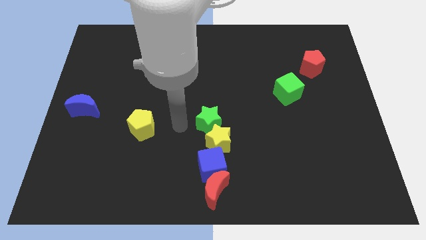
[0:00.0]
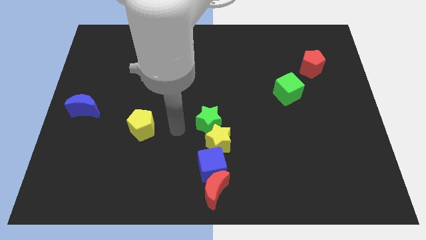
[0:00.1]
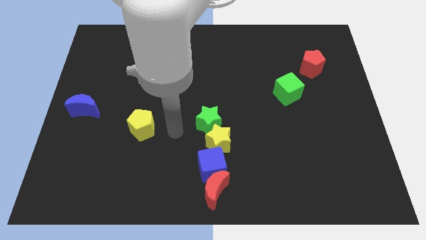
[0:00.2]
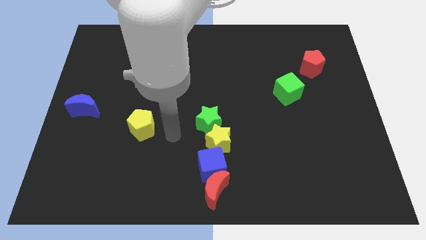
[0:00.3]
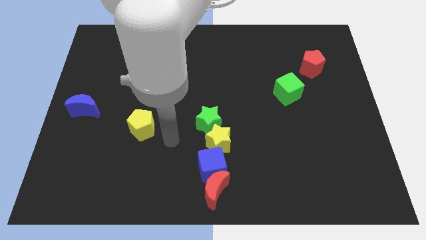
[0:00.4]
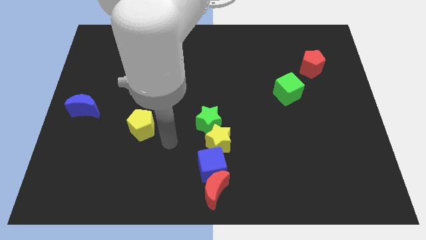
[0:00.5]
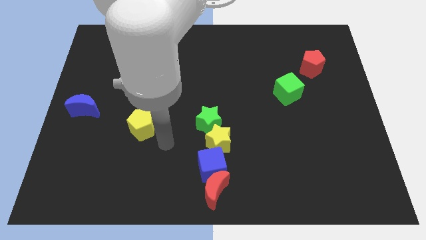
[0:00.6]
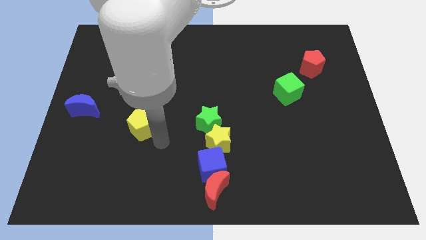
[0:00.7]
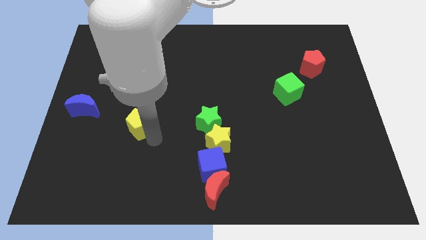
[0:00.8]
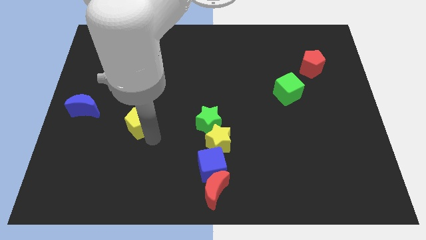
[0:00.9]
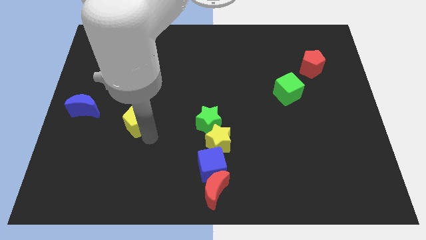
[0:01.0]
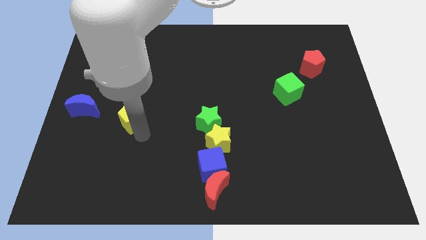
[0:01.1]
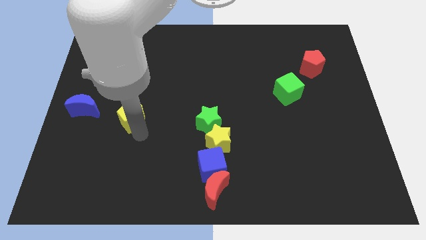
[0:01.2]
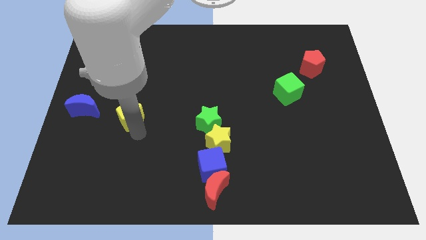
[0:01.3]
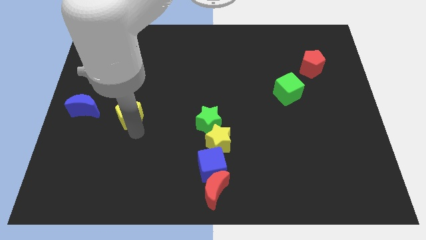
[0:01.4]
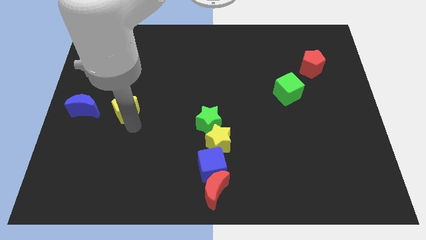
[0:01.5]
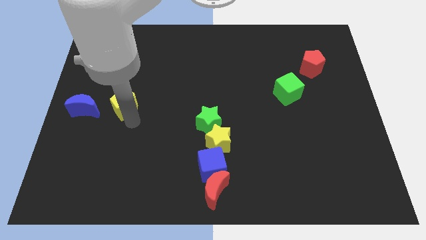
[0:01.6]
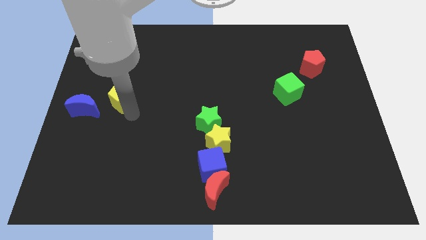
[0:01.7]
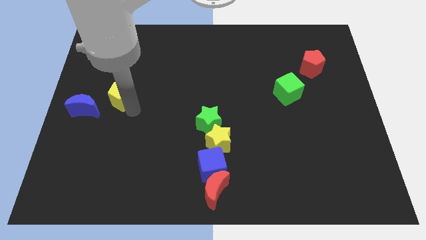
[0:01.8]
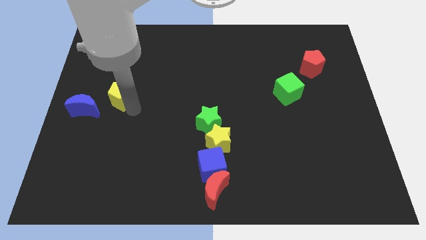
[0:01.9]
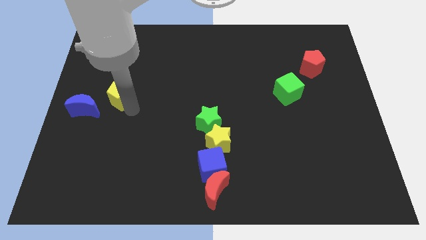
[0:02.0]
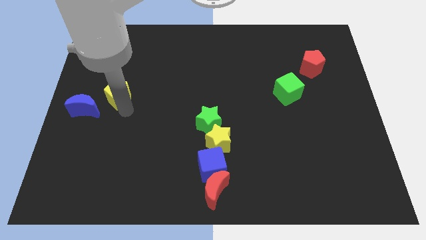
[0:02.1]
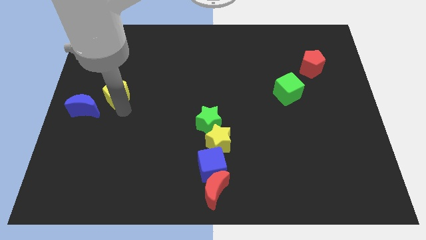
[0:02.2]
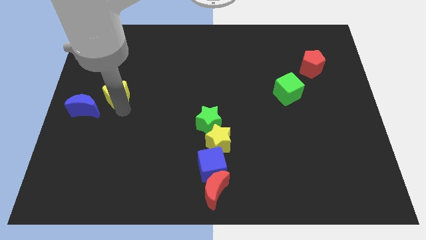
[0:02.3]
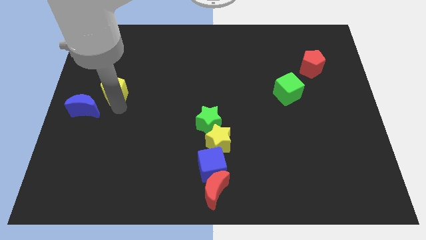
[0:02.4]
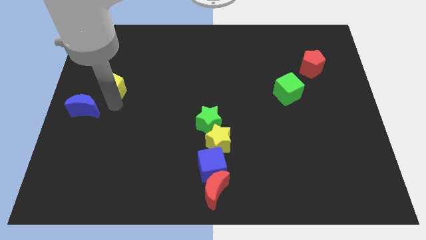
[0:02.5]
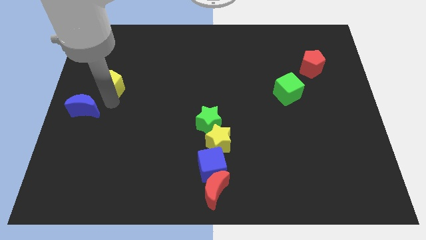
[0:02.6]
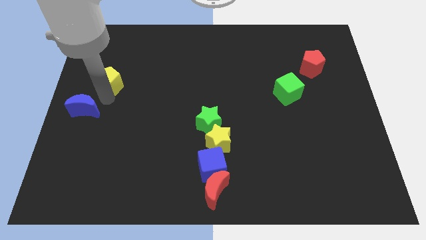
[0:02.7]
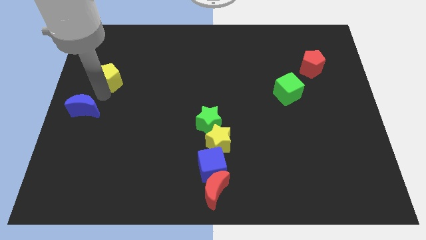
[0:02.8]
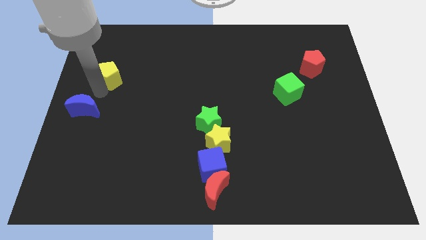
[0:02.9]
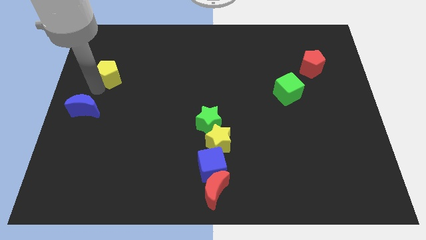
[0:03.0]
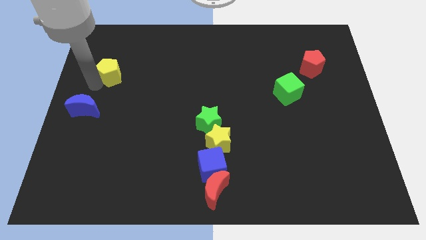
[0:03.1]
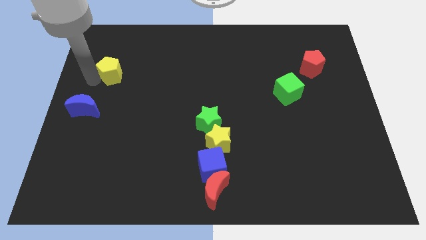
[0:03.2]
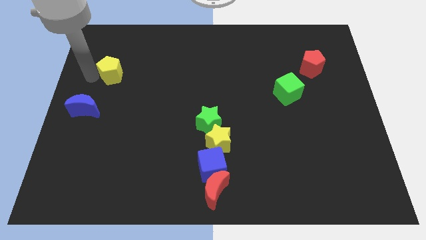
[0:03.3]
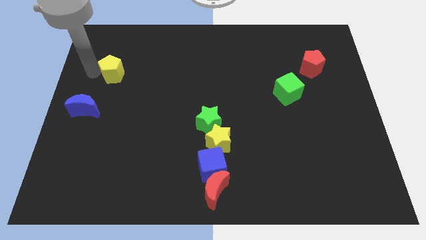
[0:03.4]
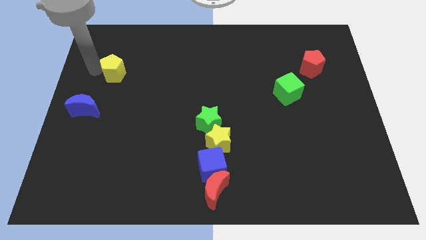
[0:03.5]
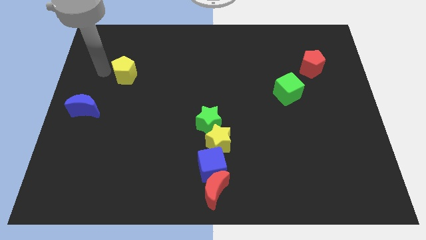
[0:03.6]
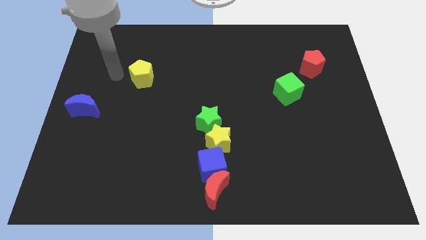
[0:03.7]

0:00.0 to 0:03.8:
push the yellow pentagon to the top right of the blue crescent

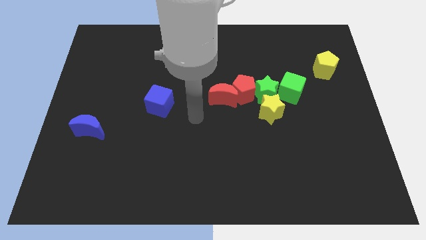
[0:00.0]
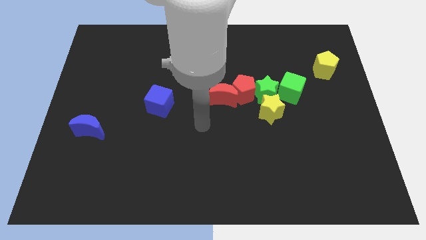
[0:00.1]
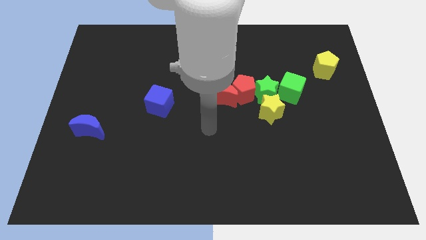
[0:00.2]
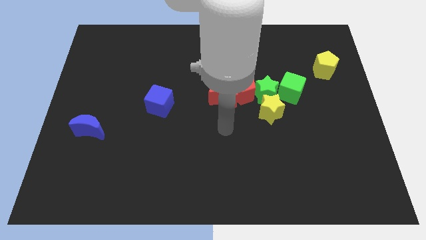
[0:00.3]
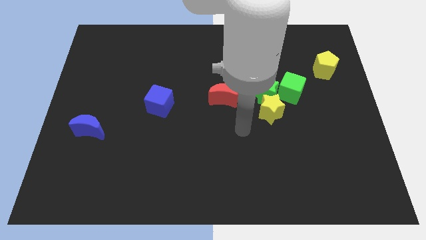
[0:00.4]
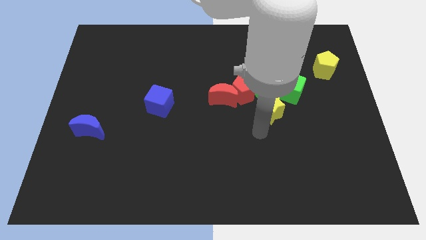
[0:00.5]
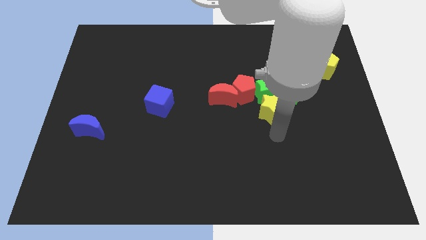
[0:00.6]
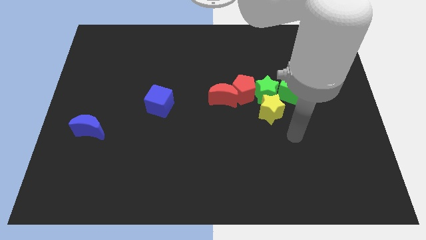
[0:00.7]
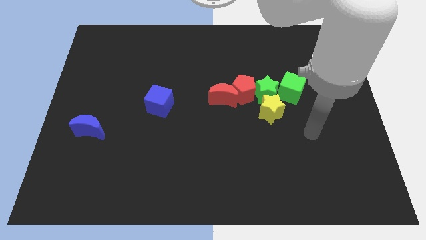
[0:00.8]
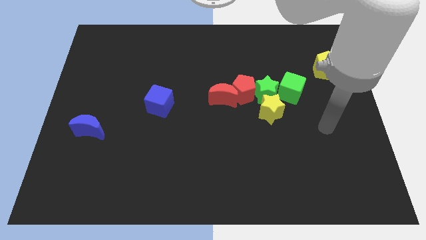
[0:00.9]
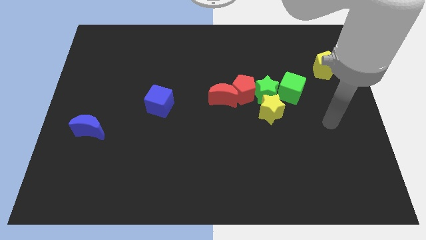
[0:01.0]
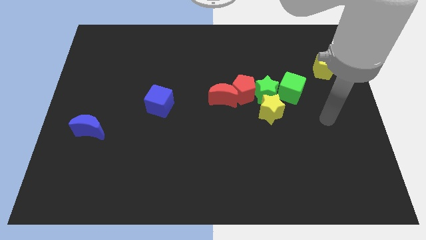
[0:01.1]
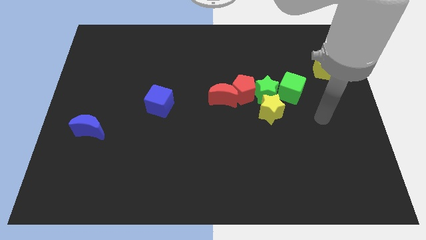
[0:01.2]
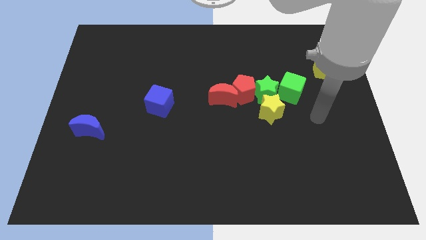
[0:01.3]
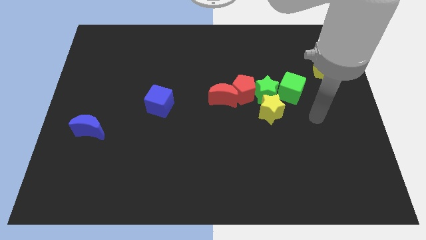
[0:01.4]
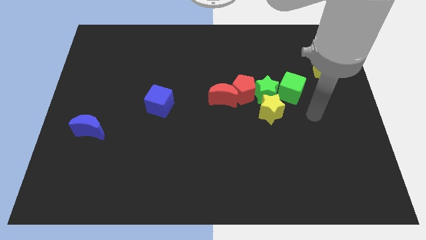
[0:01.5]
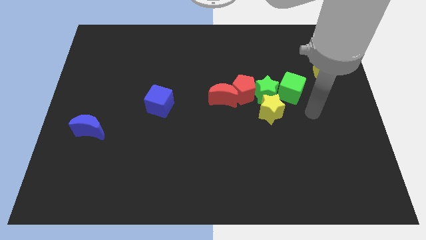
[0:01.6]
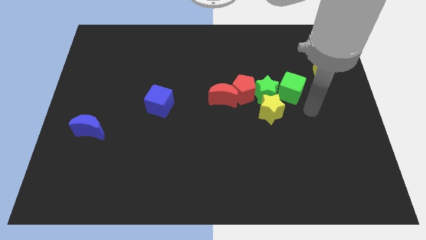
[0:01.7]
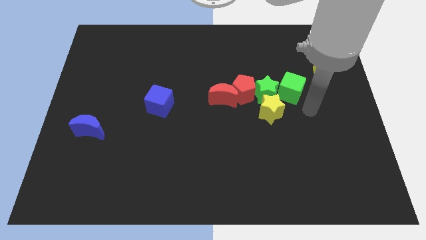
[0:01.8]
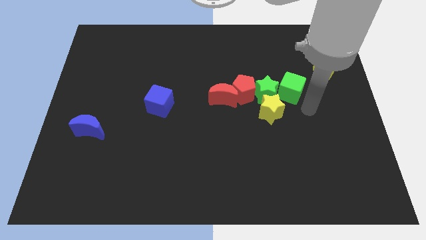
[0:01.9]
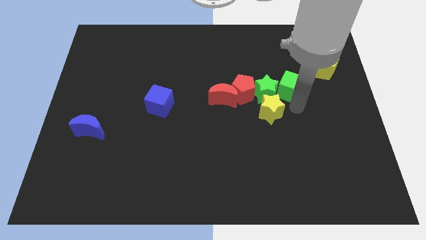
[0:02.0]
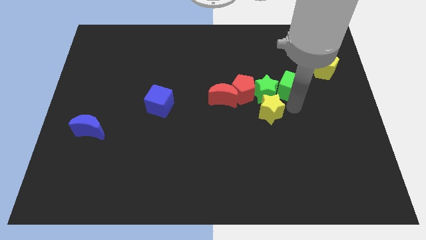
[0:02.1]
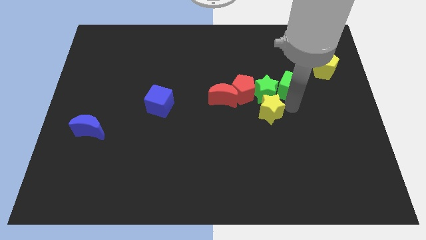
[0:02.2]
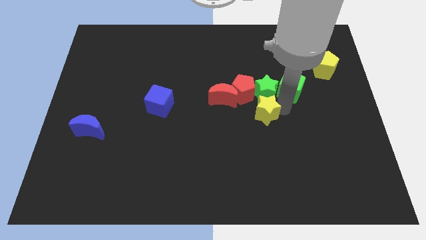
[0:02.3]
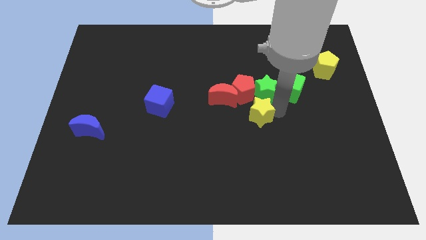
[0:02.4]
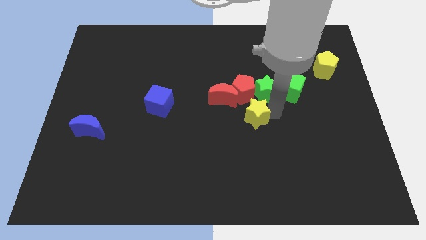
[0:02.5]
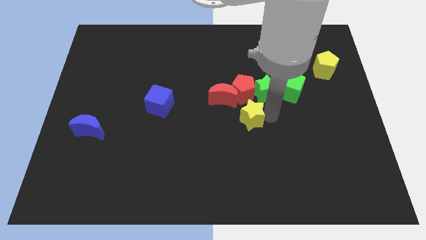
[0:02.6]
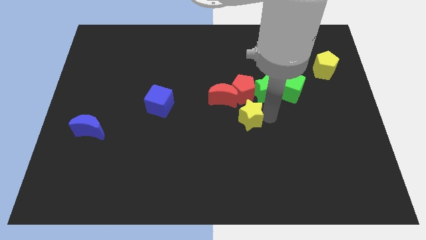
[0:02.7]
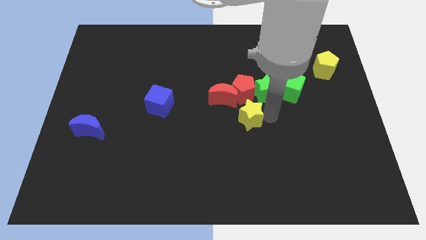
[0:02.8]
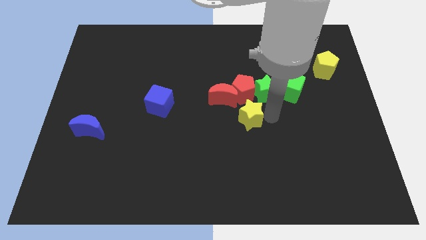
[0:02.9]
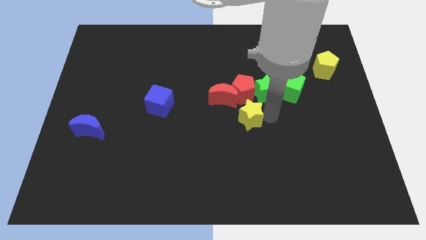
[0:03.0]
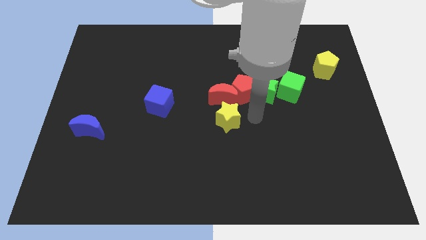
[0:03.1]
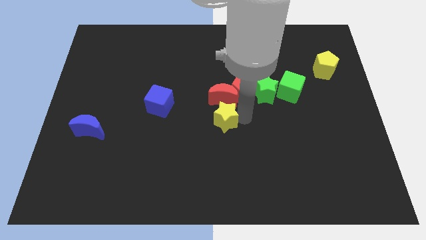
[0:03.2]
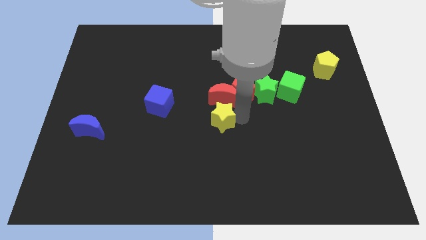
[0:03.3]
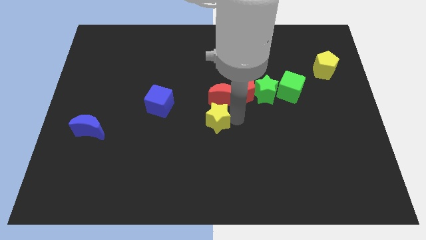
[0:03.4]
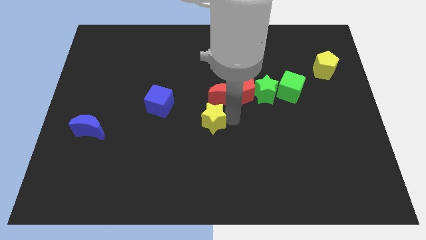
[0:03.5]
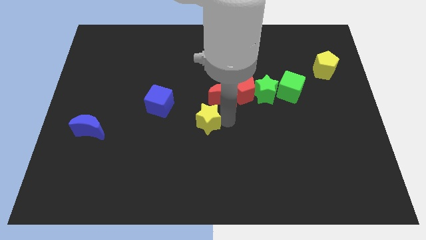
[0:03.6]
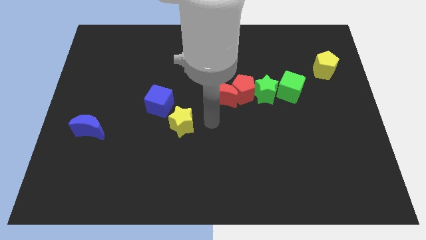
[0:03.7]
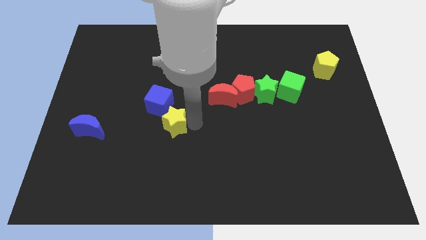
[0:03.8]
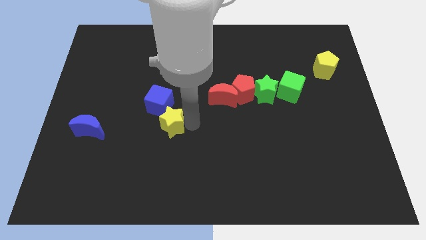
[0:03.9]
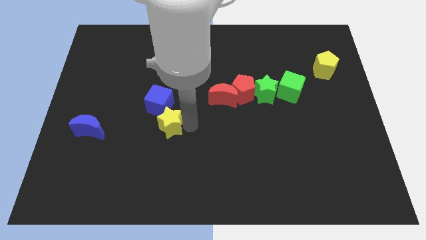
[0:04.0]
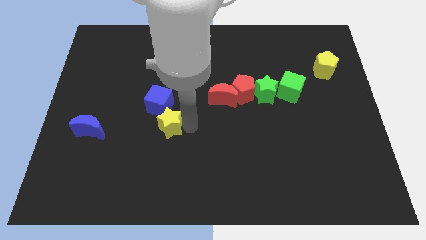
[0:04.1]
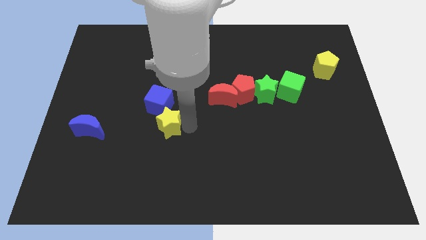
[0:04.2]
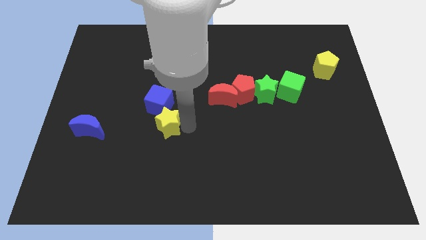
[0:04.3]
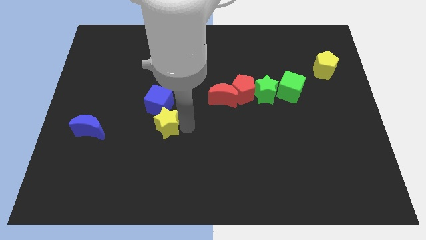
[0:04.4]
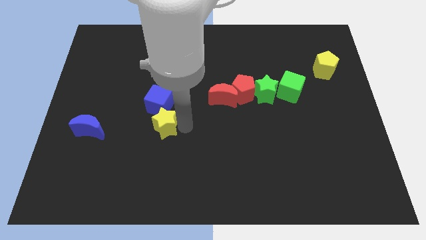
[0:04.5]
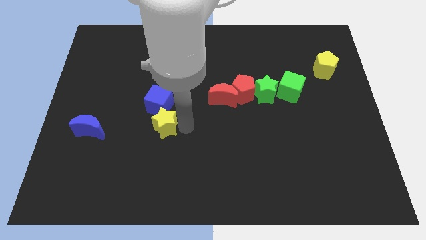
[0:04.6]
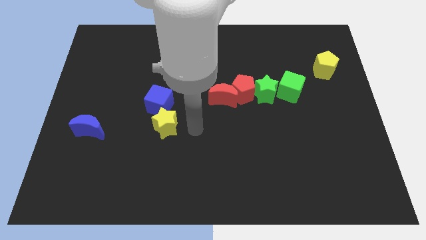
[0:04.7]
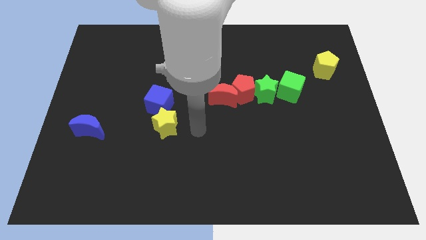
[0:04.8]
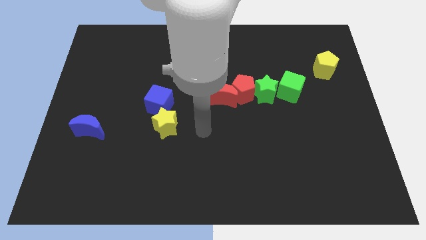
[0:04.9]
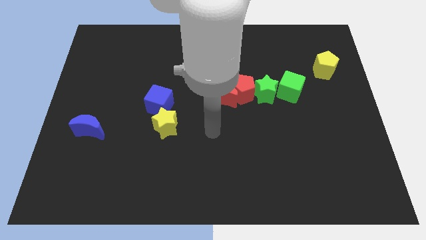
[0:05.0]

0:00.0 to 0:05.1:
move the yellow star below the blue cube

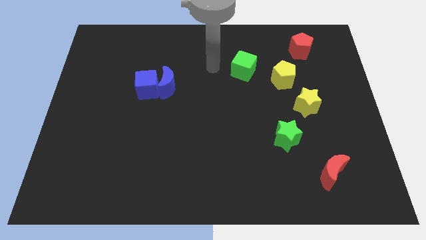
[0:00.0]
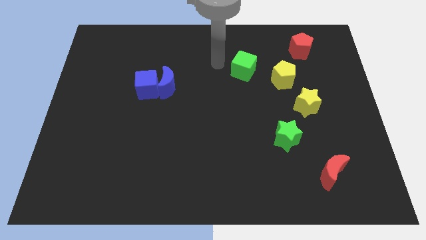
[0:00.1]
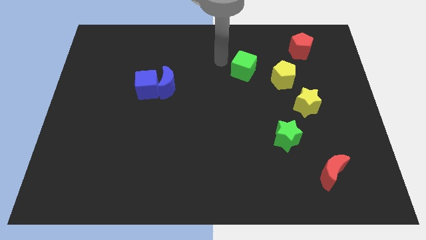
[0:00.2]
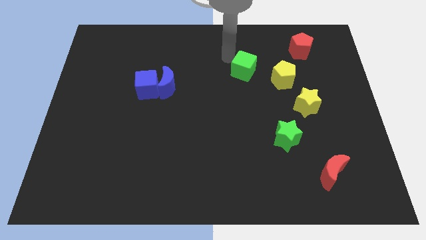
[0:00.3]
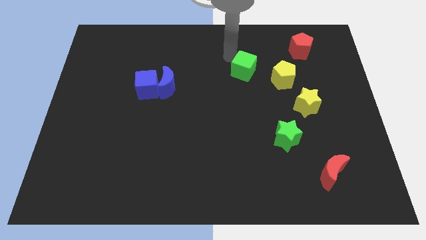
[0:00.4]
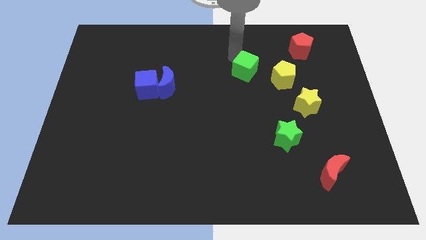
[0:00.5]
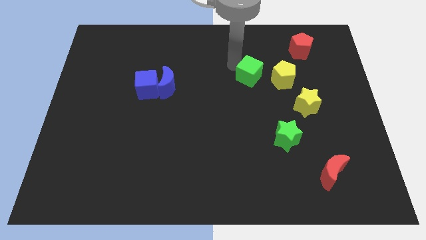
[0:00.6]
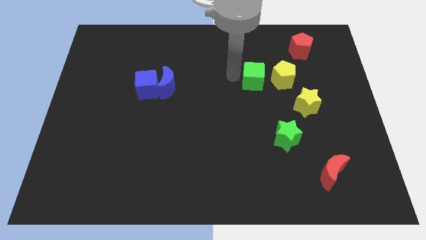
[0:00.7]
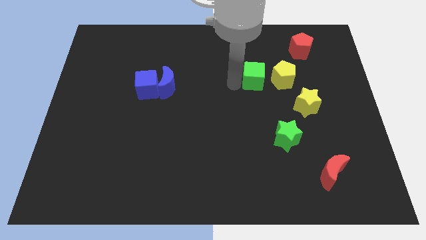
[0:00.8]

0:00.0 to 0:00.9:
place the green cube to the left side of the yellow pentagon
